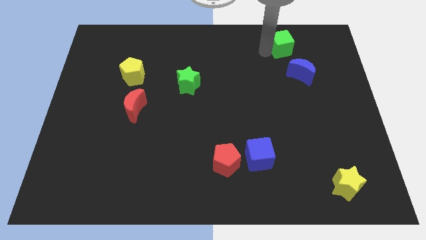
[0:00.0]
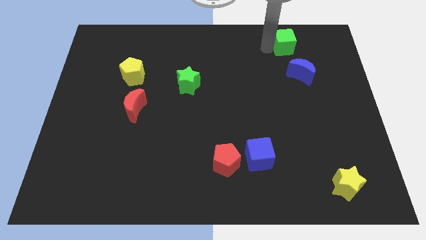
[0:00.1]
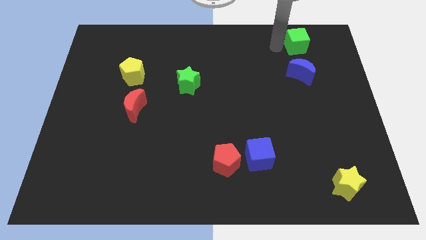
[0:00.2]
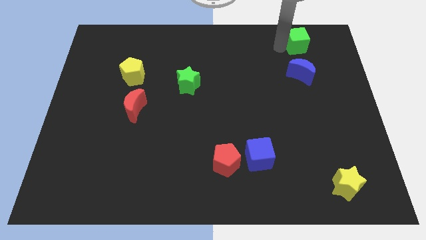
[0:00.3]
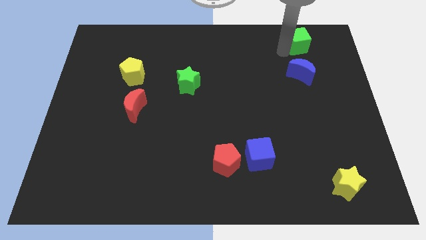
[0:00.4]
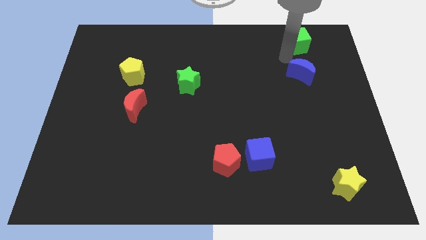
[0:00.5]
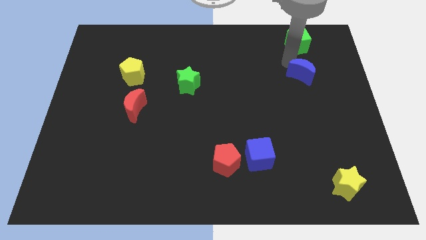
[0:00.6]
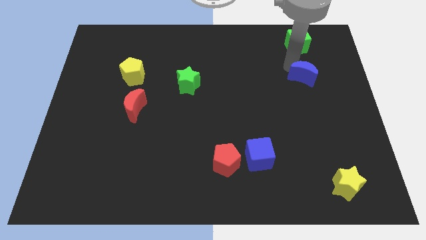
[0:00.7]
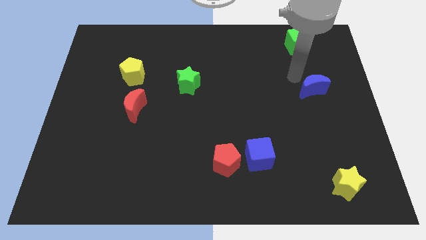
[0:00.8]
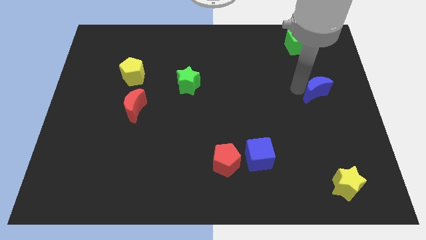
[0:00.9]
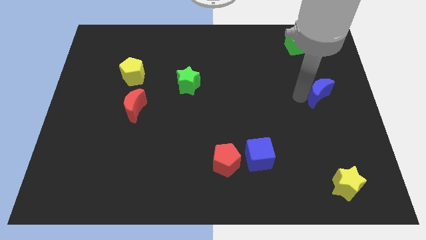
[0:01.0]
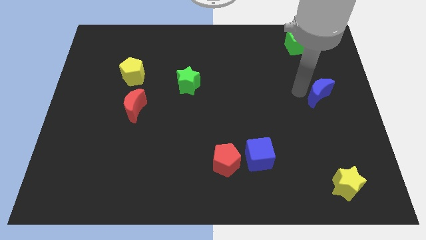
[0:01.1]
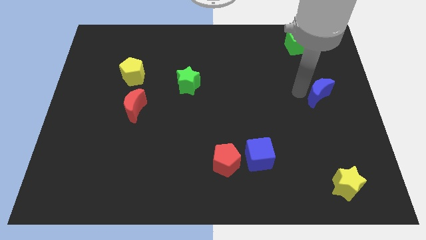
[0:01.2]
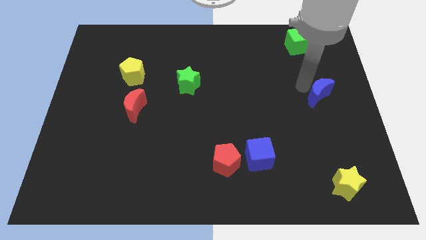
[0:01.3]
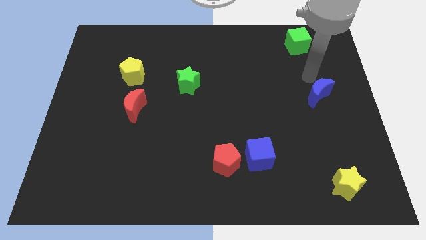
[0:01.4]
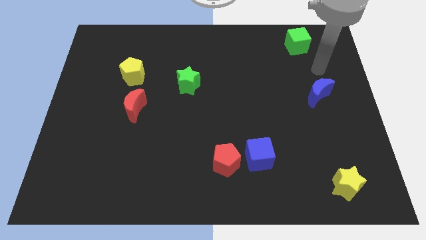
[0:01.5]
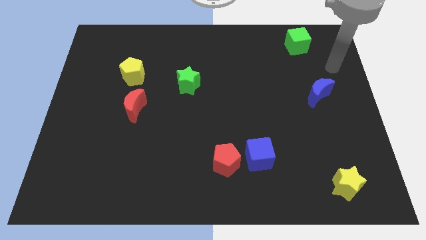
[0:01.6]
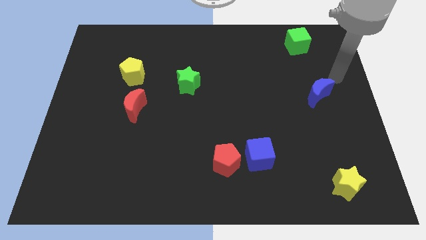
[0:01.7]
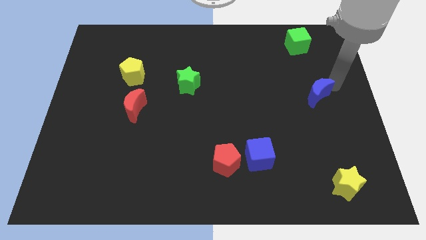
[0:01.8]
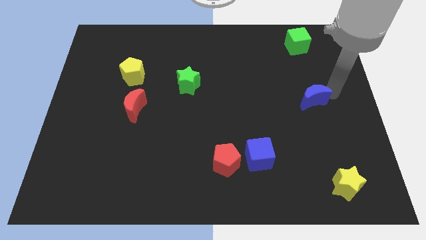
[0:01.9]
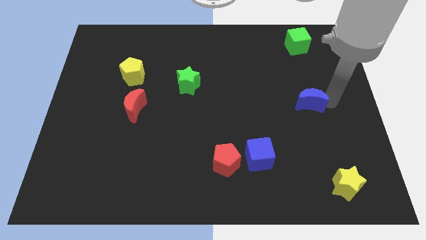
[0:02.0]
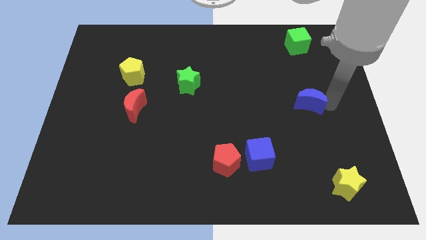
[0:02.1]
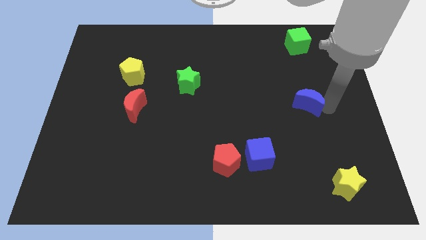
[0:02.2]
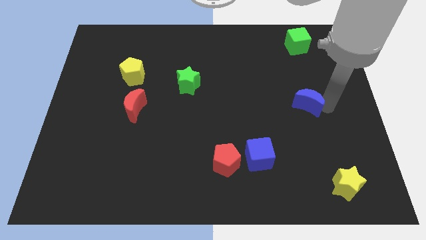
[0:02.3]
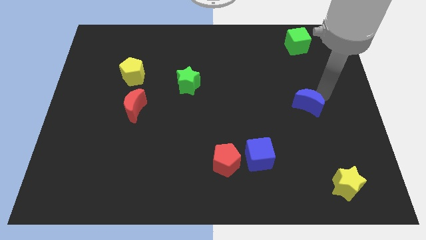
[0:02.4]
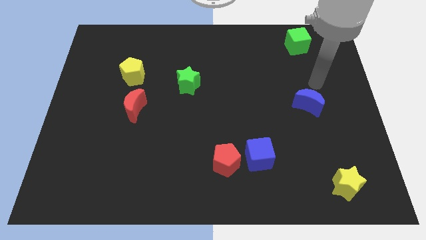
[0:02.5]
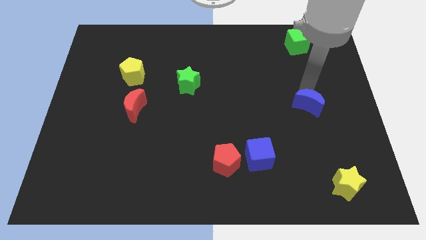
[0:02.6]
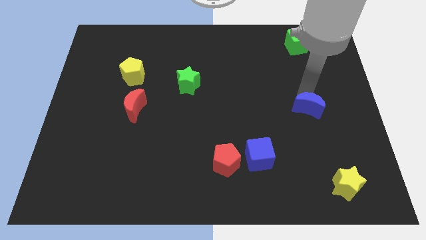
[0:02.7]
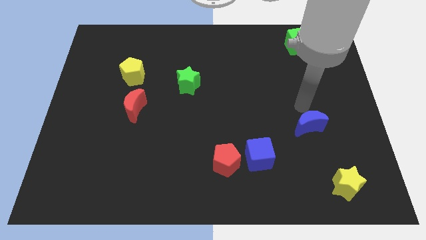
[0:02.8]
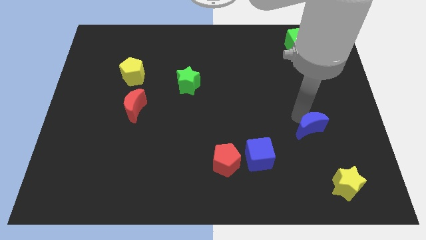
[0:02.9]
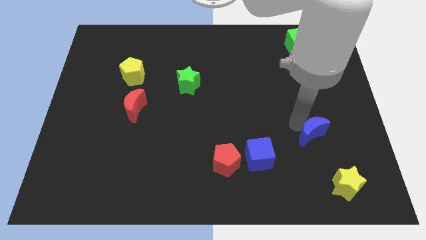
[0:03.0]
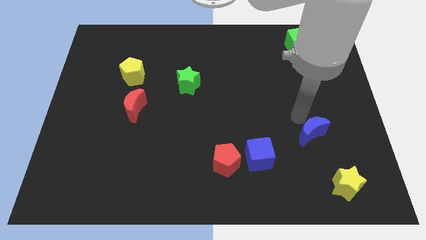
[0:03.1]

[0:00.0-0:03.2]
separate the green cube and the blue moon

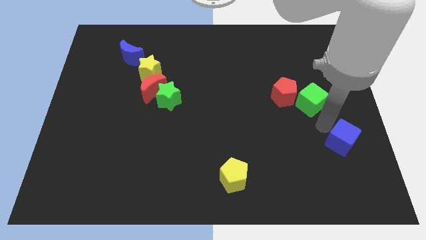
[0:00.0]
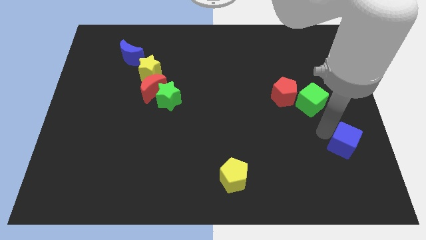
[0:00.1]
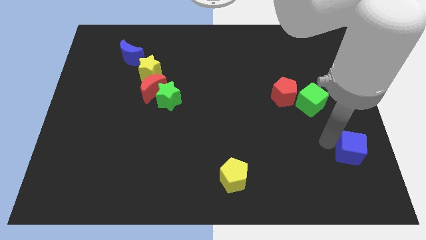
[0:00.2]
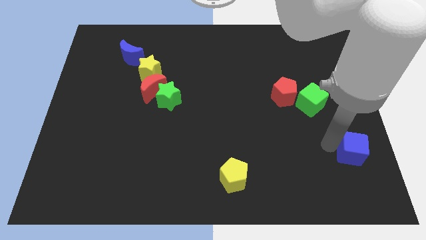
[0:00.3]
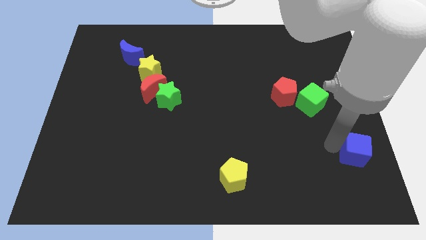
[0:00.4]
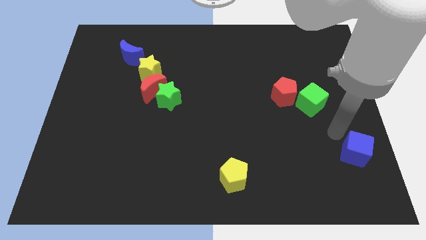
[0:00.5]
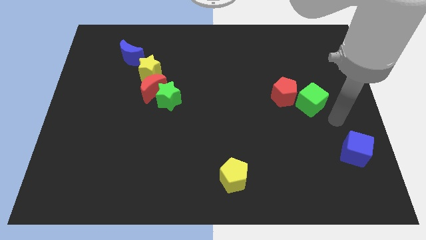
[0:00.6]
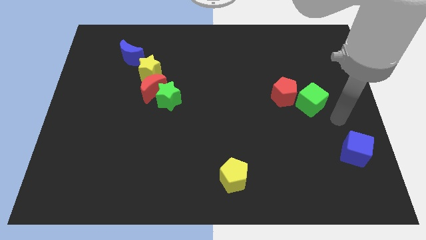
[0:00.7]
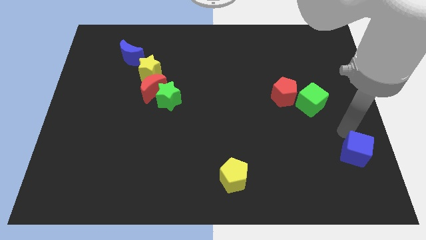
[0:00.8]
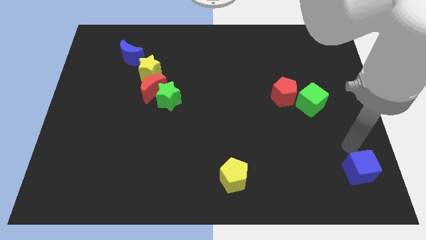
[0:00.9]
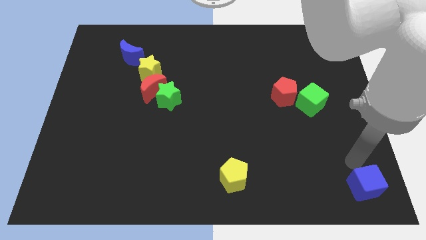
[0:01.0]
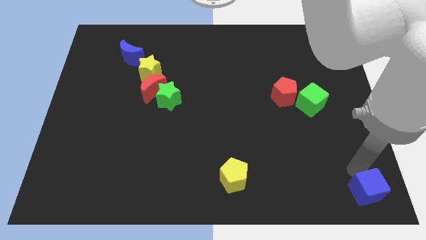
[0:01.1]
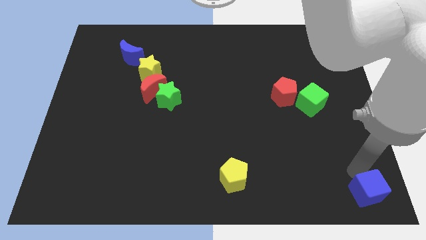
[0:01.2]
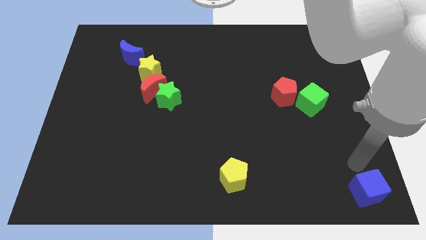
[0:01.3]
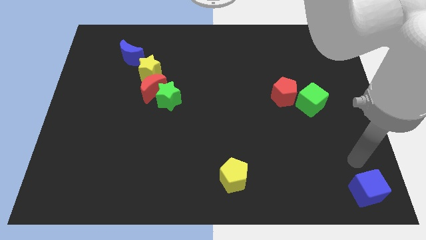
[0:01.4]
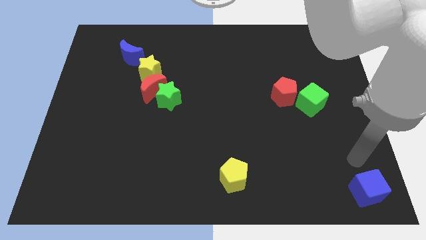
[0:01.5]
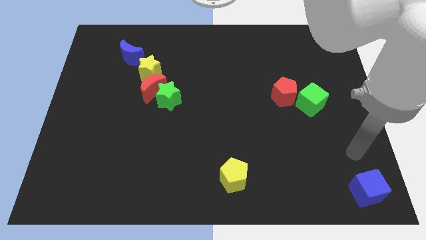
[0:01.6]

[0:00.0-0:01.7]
move the blue cube towards the bottom right

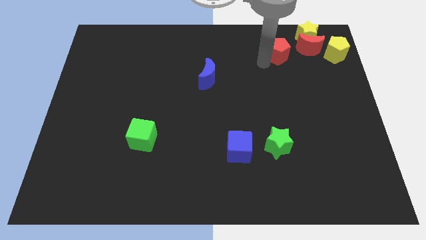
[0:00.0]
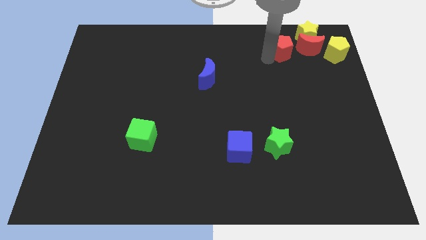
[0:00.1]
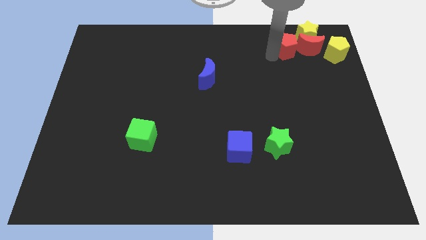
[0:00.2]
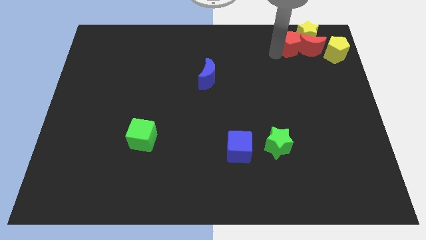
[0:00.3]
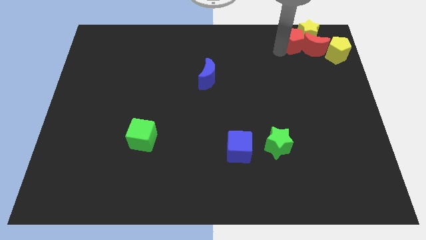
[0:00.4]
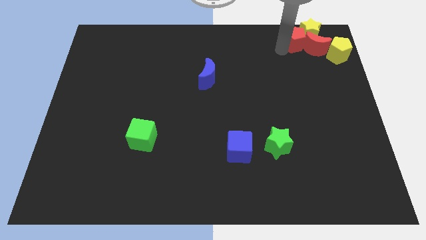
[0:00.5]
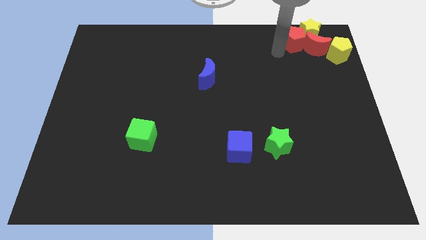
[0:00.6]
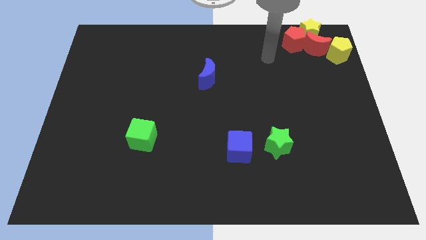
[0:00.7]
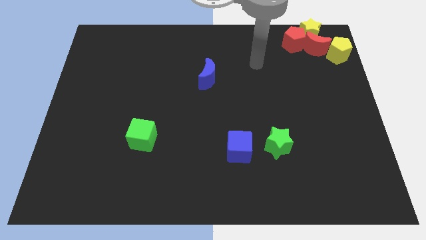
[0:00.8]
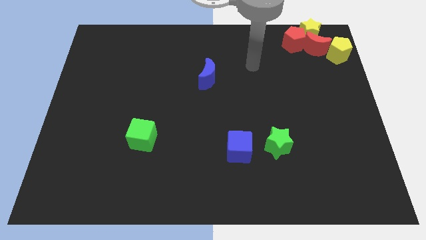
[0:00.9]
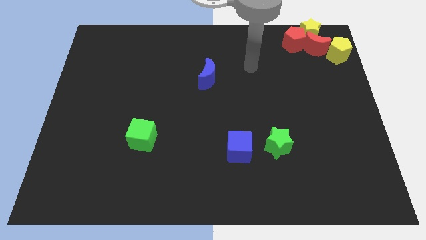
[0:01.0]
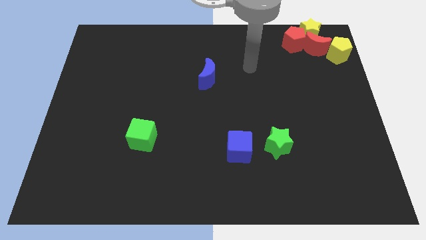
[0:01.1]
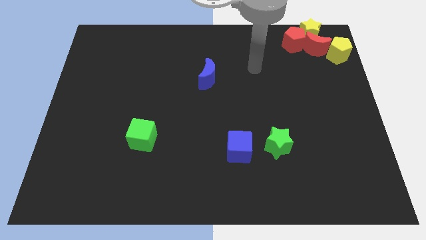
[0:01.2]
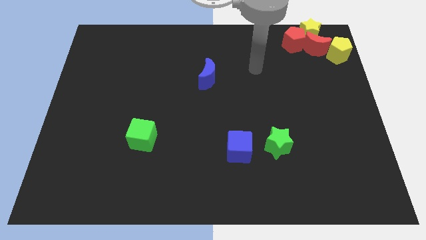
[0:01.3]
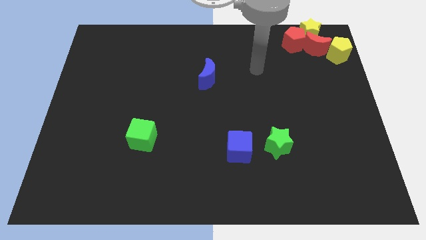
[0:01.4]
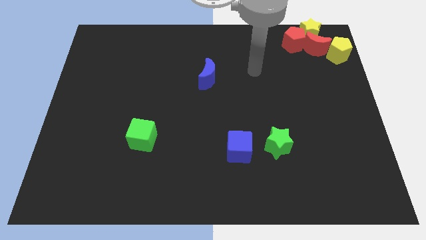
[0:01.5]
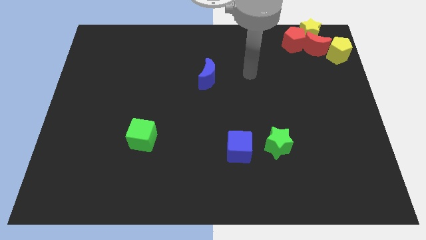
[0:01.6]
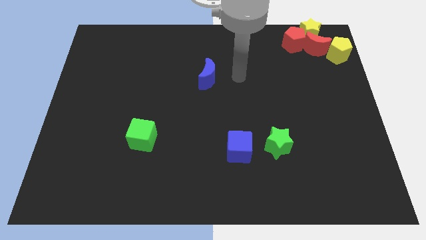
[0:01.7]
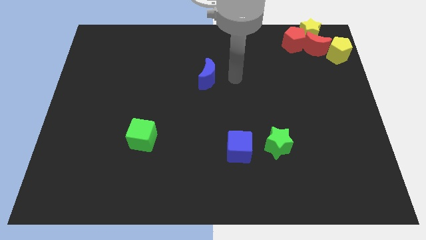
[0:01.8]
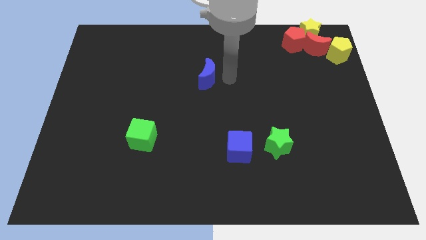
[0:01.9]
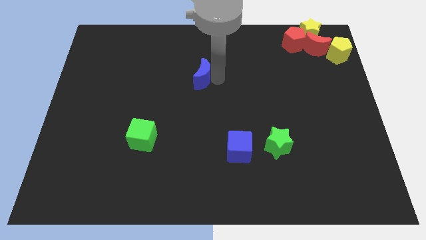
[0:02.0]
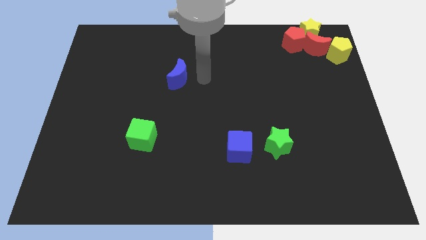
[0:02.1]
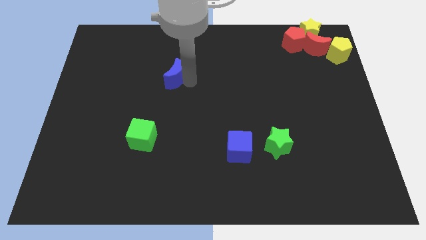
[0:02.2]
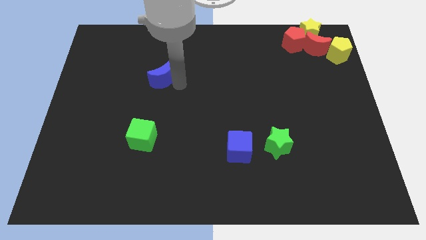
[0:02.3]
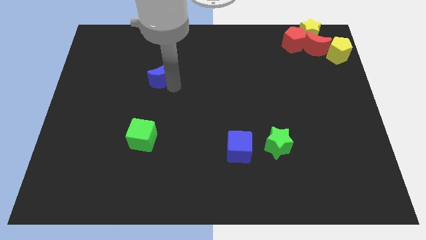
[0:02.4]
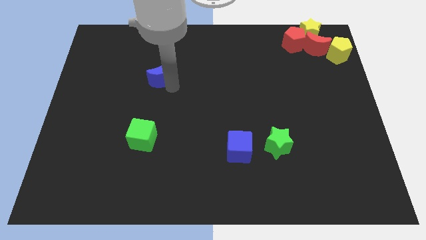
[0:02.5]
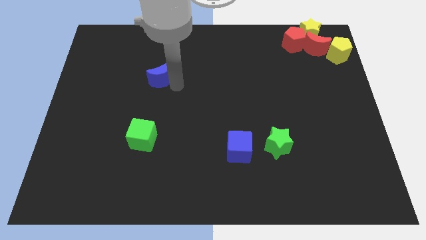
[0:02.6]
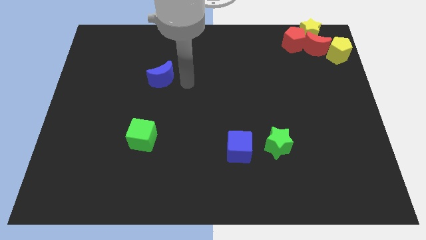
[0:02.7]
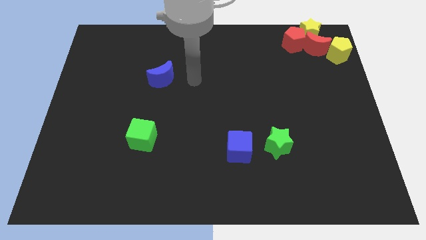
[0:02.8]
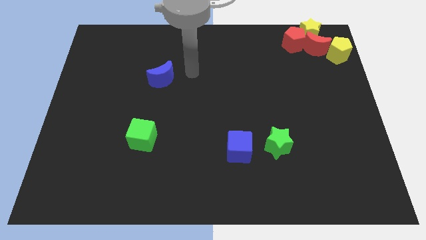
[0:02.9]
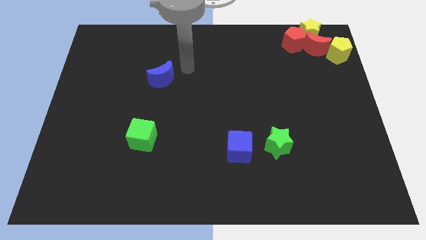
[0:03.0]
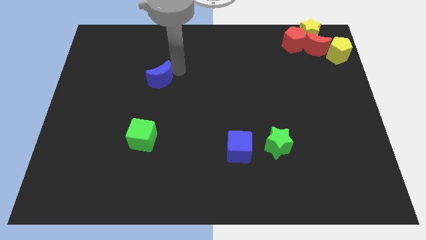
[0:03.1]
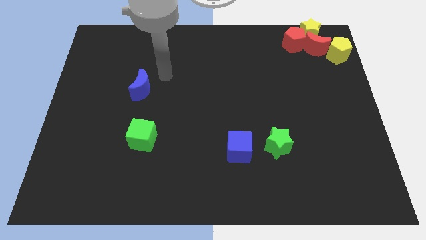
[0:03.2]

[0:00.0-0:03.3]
place the blue moon above the green cube

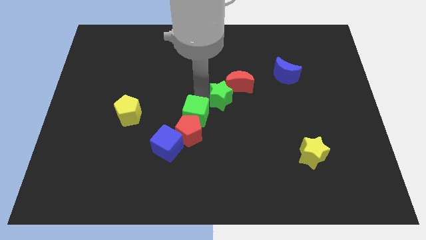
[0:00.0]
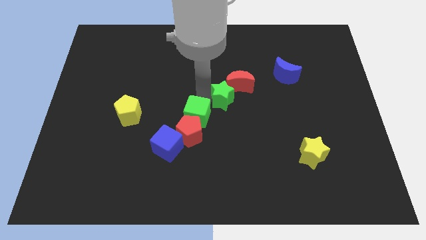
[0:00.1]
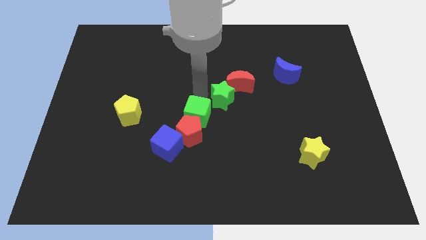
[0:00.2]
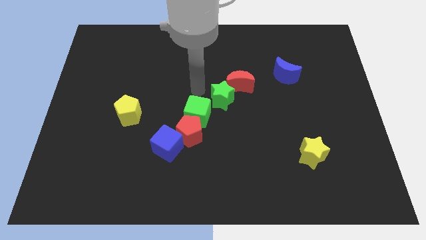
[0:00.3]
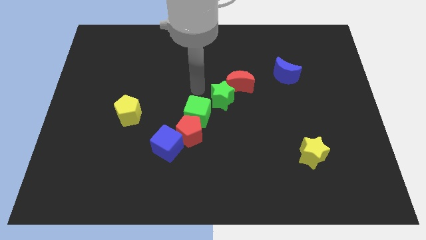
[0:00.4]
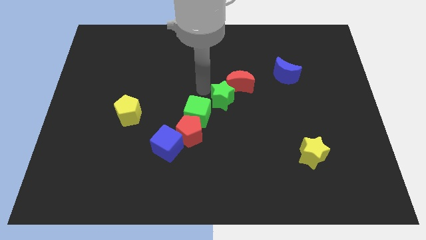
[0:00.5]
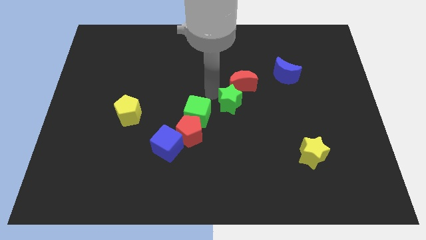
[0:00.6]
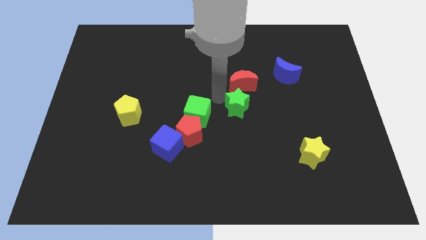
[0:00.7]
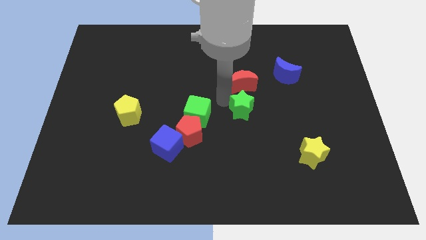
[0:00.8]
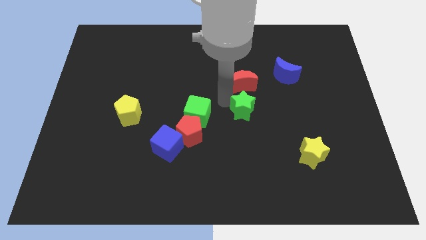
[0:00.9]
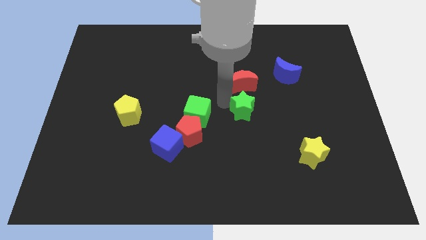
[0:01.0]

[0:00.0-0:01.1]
push the green cube into the red pentagon towards the bottom left of the board
